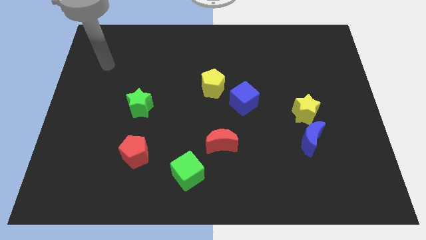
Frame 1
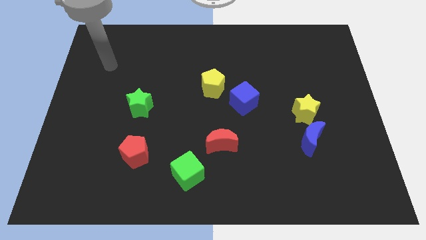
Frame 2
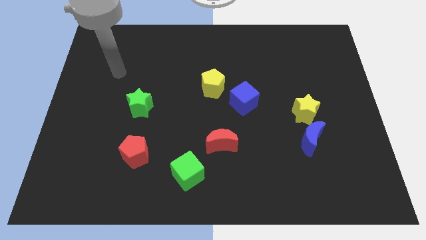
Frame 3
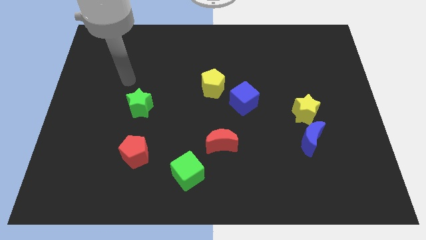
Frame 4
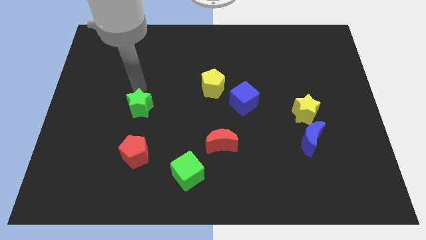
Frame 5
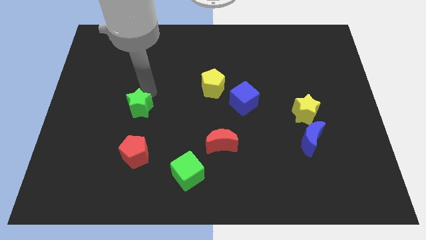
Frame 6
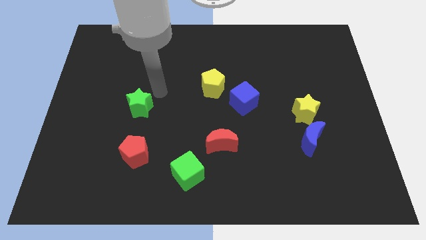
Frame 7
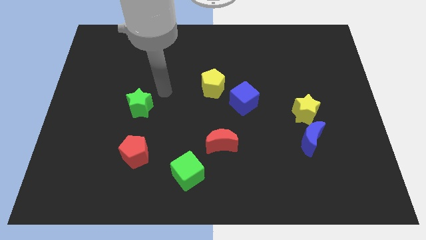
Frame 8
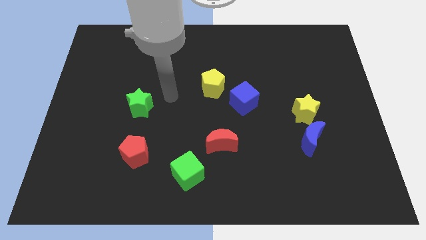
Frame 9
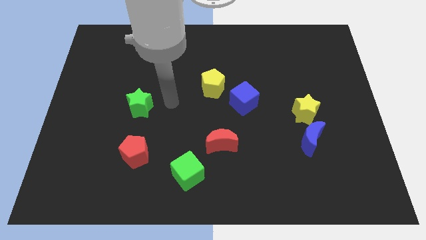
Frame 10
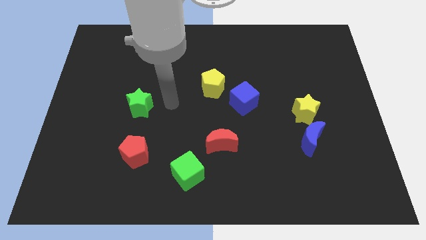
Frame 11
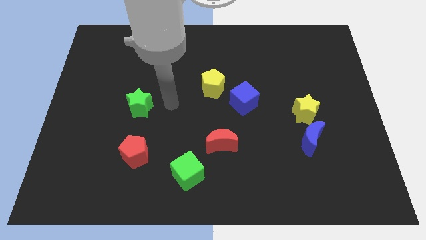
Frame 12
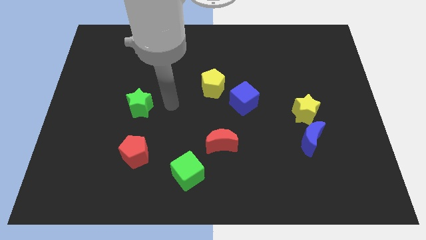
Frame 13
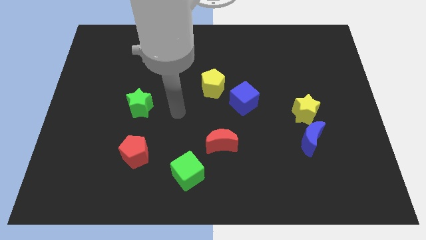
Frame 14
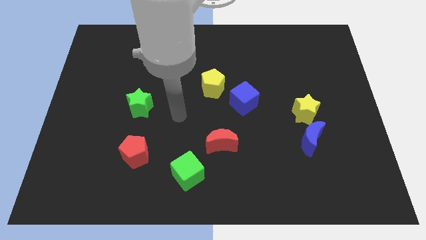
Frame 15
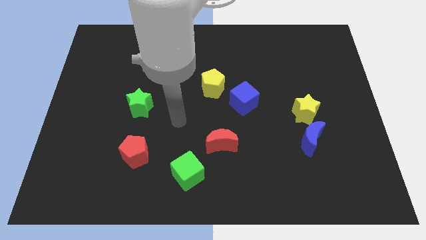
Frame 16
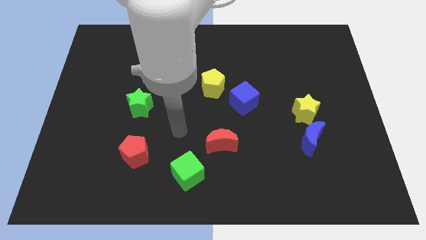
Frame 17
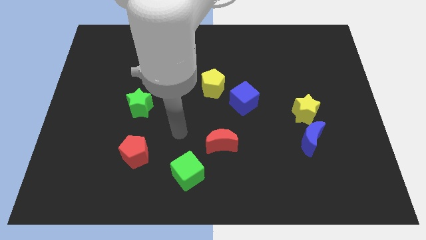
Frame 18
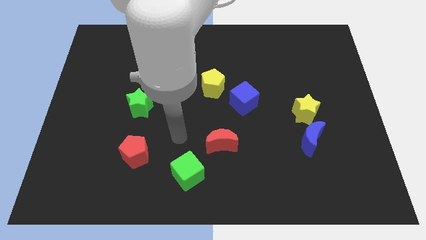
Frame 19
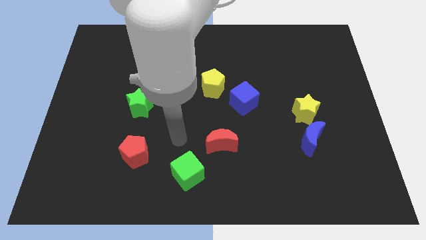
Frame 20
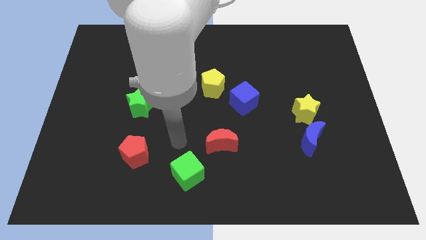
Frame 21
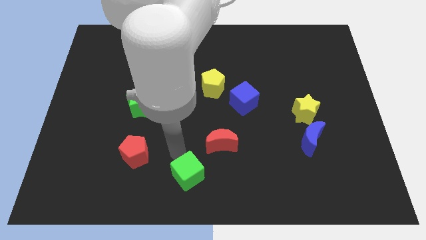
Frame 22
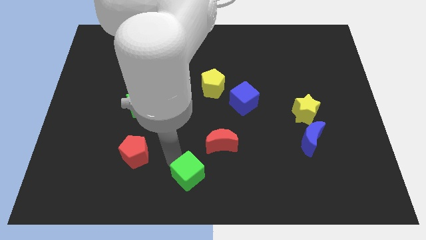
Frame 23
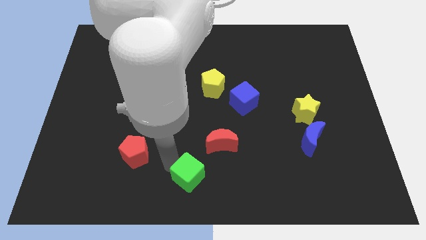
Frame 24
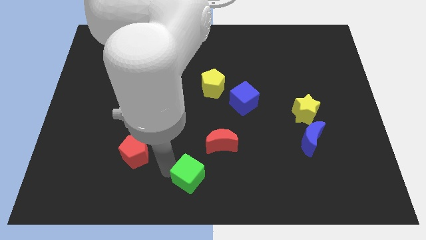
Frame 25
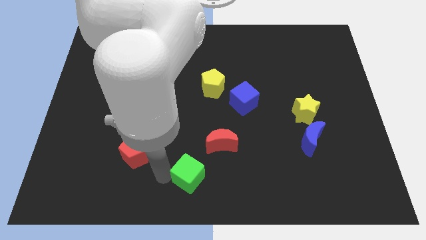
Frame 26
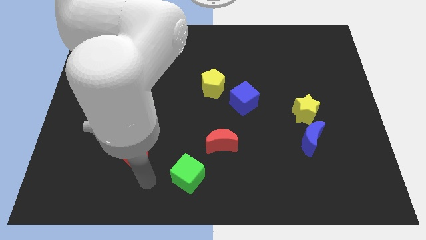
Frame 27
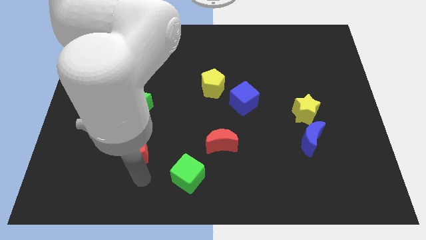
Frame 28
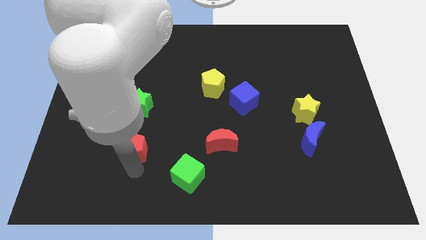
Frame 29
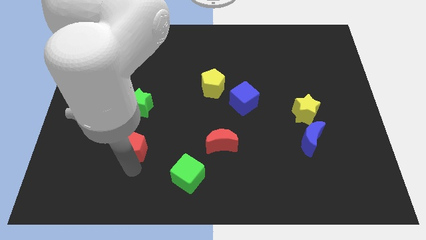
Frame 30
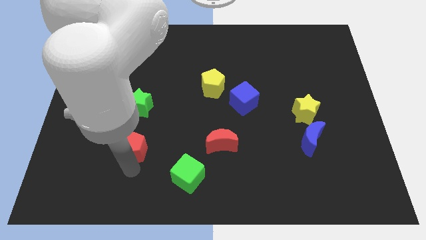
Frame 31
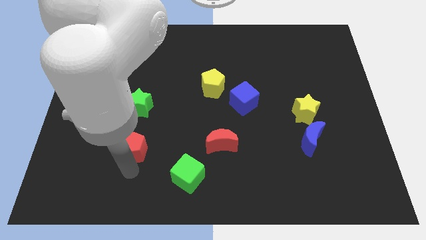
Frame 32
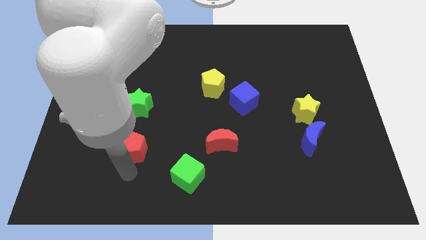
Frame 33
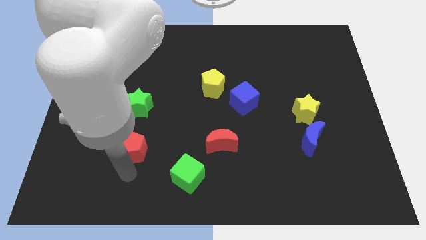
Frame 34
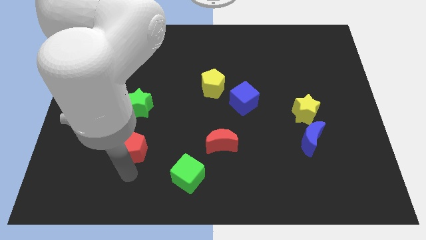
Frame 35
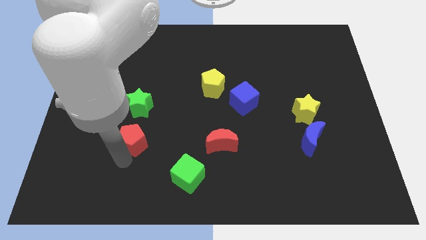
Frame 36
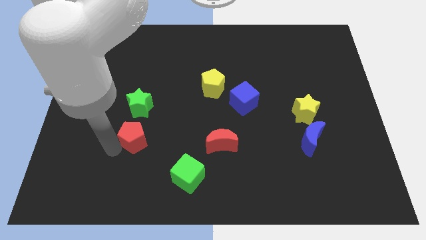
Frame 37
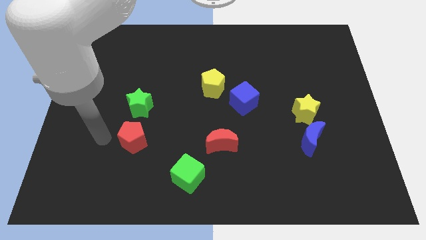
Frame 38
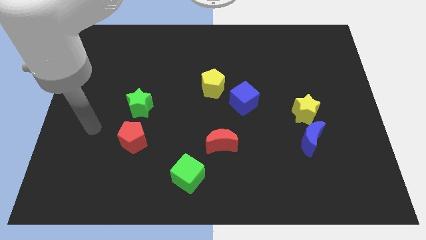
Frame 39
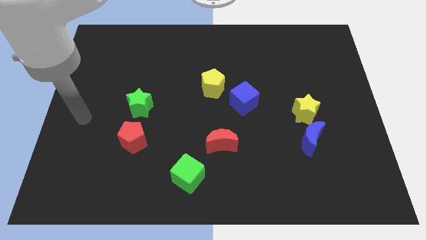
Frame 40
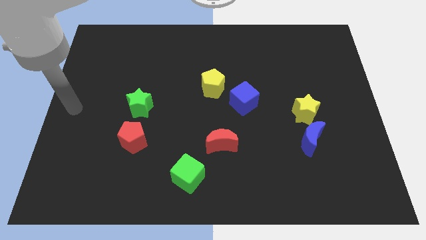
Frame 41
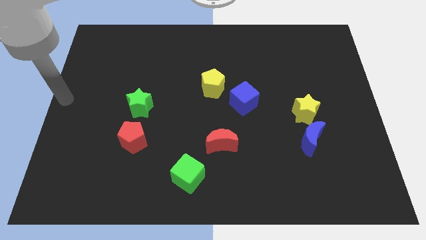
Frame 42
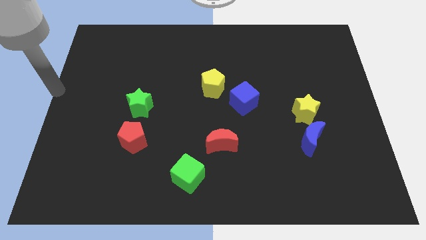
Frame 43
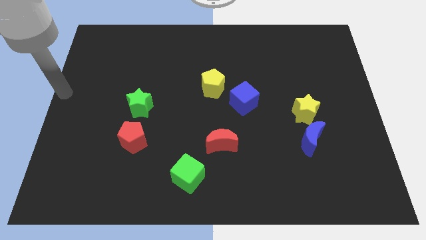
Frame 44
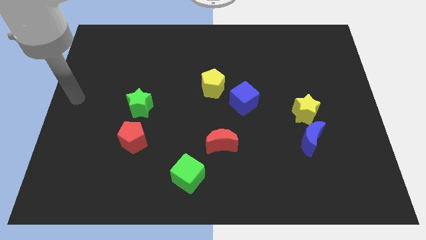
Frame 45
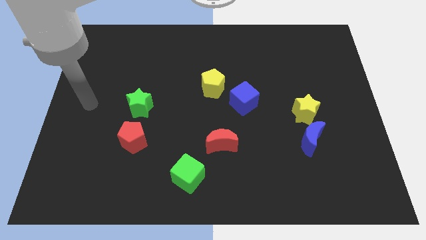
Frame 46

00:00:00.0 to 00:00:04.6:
push the red pentagon slightly upwards

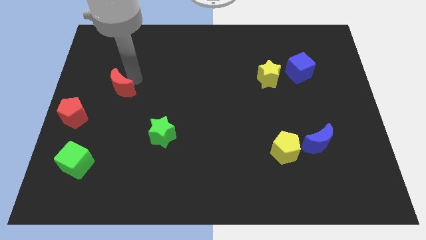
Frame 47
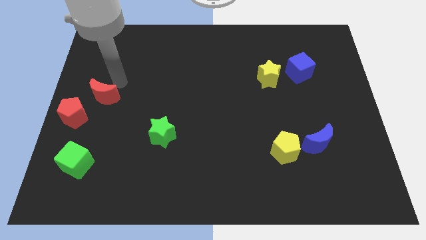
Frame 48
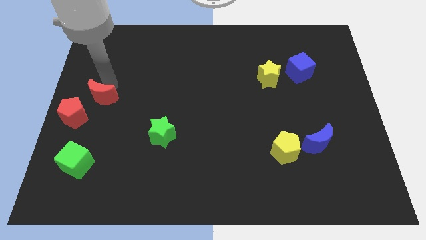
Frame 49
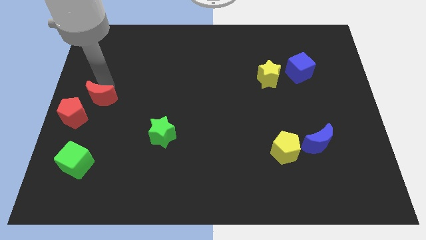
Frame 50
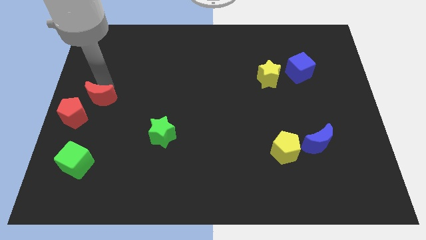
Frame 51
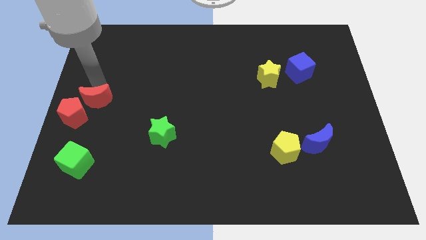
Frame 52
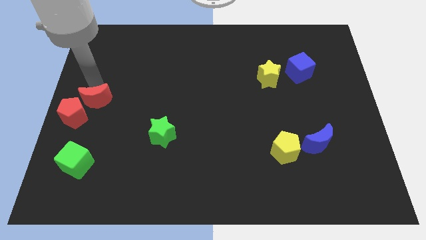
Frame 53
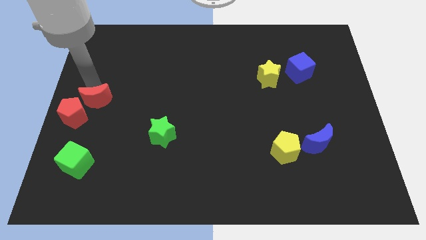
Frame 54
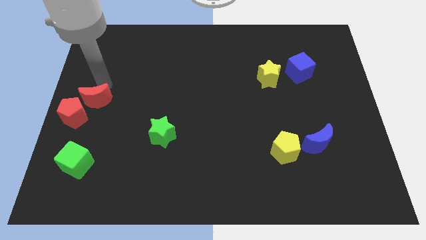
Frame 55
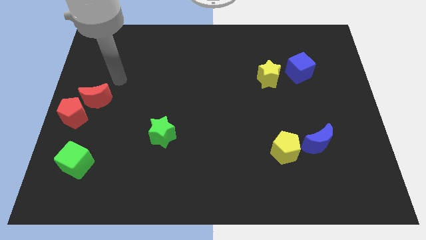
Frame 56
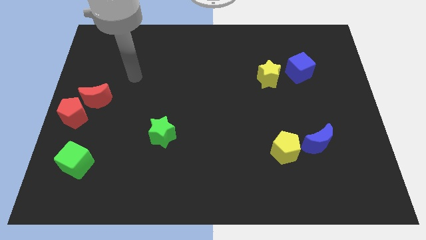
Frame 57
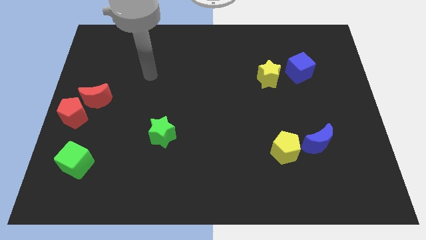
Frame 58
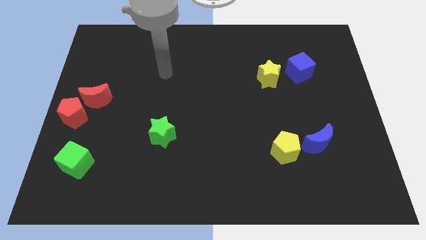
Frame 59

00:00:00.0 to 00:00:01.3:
place the red crescent close to the red pentagon

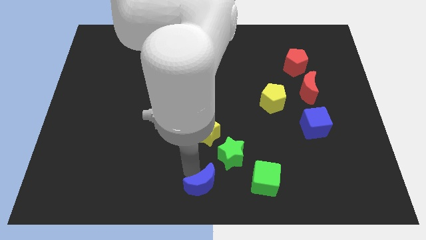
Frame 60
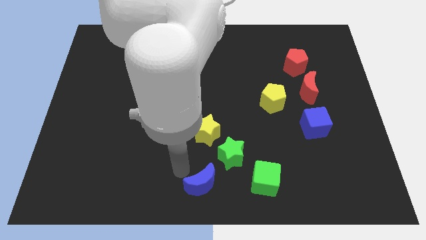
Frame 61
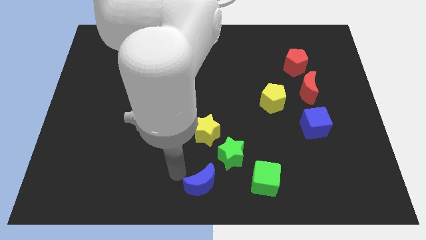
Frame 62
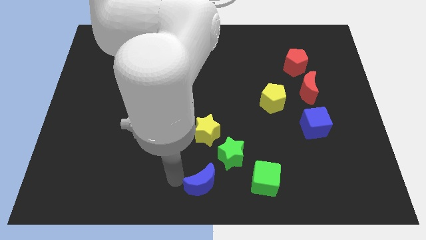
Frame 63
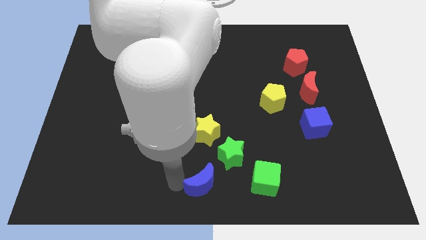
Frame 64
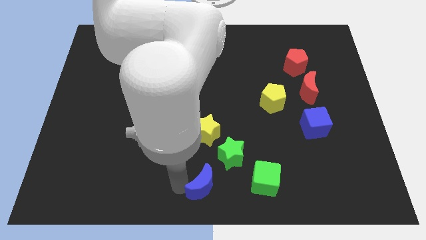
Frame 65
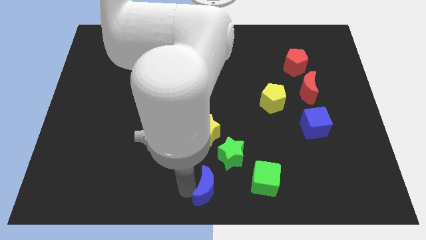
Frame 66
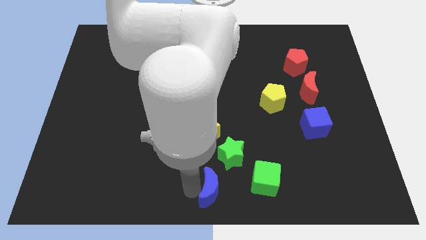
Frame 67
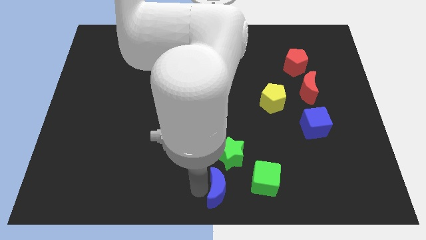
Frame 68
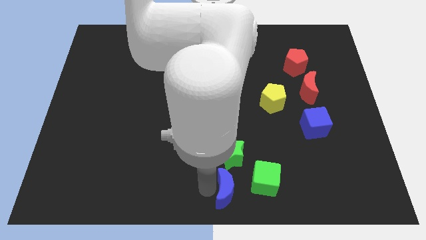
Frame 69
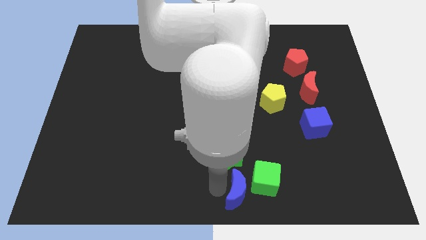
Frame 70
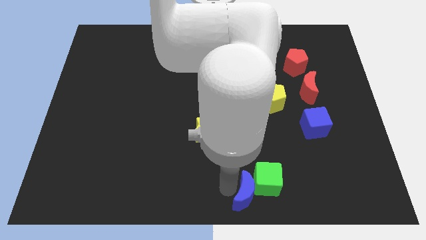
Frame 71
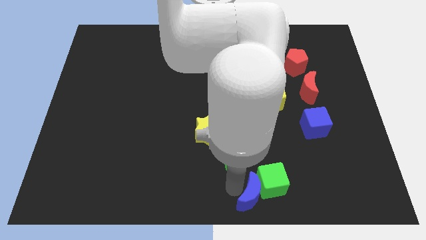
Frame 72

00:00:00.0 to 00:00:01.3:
move the blue crescent into the green cube

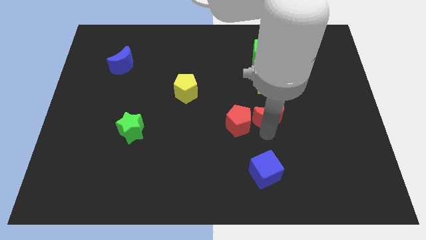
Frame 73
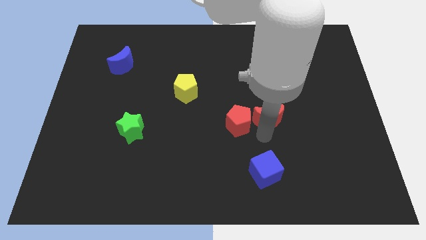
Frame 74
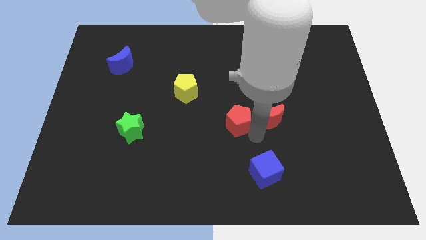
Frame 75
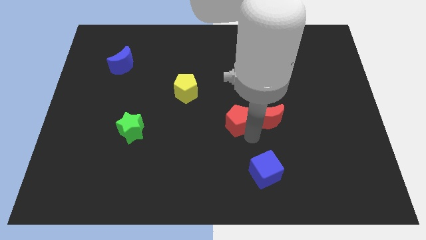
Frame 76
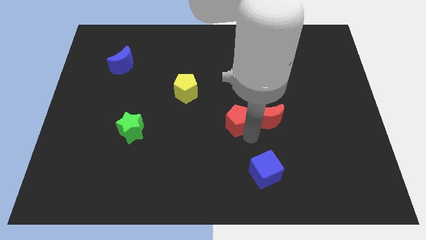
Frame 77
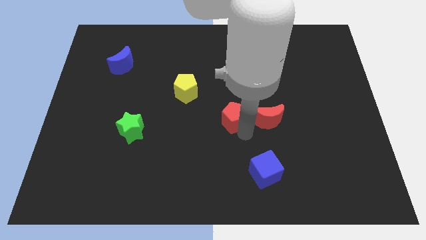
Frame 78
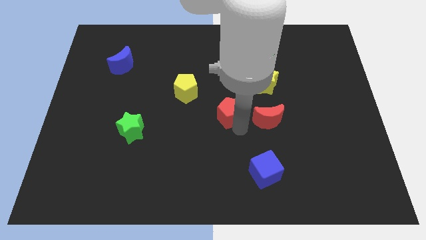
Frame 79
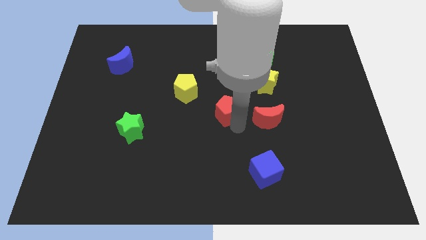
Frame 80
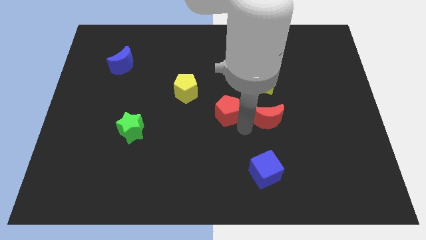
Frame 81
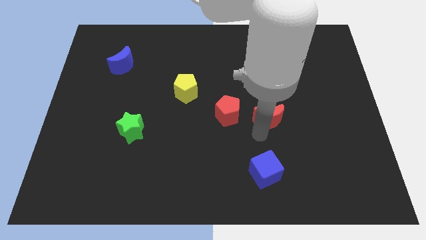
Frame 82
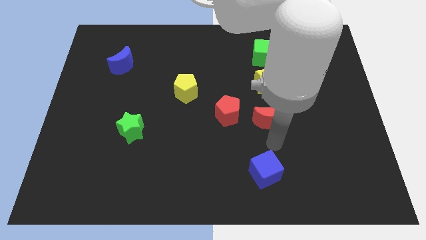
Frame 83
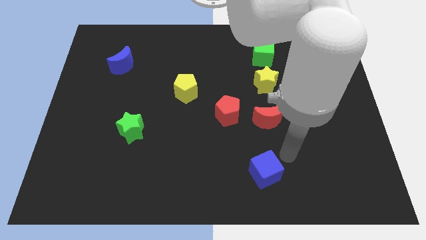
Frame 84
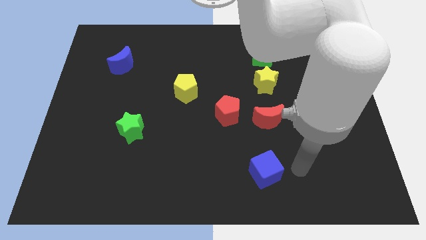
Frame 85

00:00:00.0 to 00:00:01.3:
push the red pentagon upwards slightly

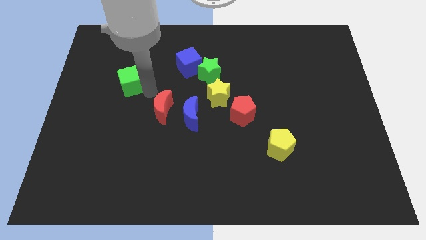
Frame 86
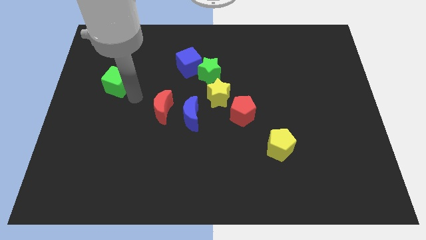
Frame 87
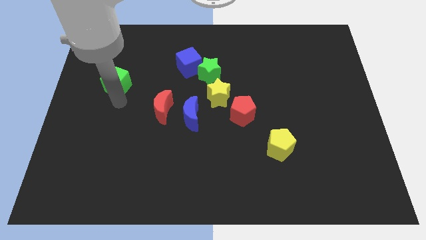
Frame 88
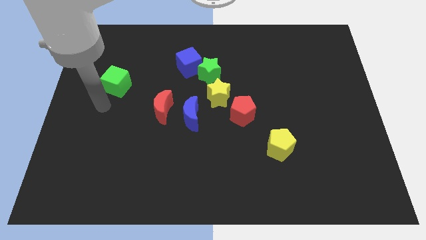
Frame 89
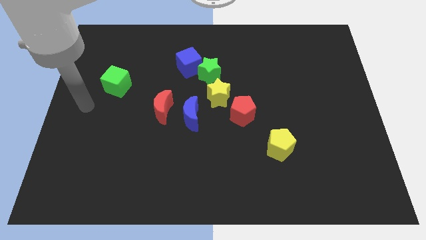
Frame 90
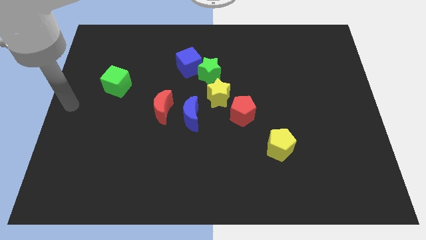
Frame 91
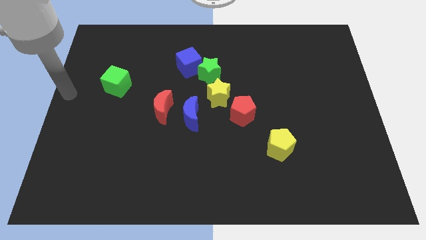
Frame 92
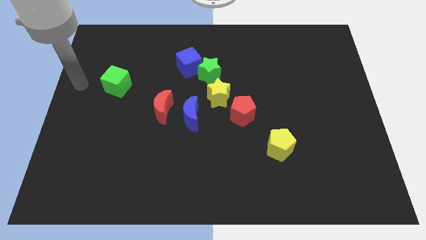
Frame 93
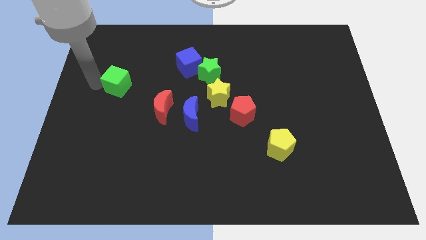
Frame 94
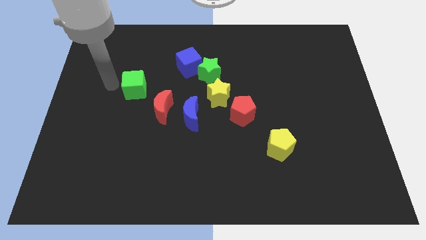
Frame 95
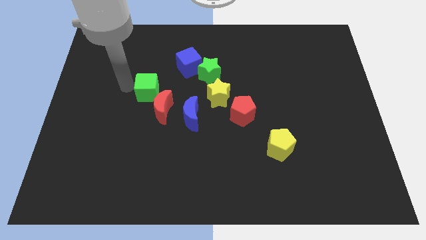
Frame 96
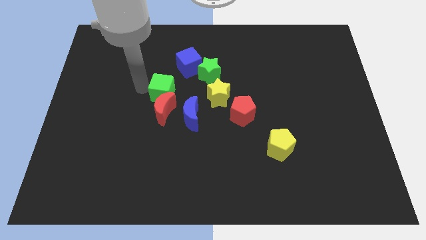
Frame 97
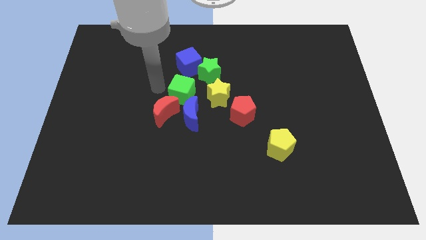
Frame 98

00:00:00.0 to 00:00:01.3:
move the green cube to the top of the red crescent
